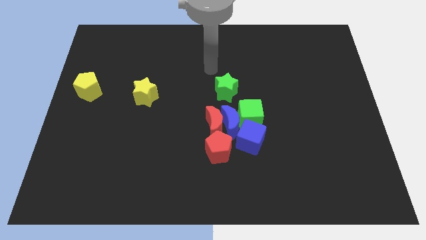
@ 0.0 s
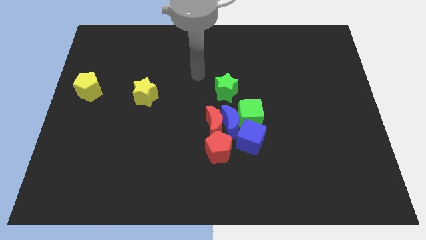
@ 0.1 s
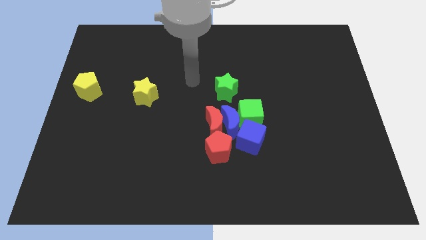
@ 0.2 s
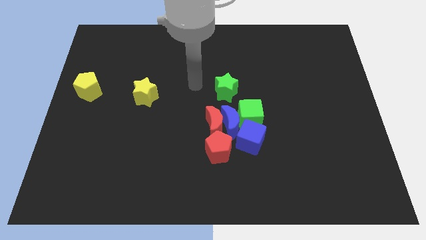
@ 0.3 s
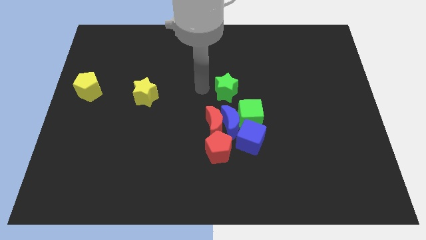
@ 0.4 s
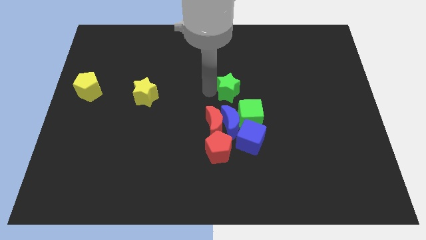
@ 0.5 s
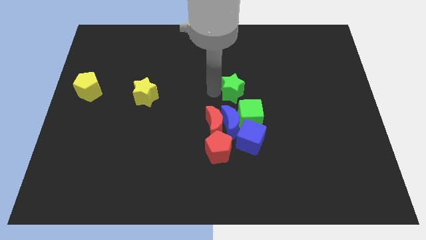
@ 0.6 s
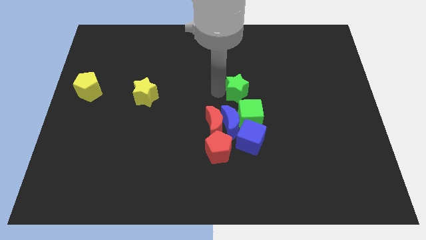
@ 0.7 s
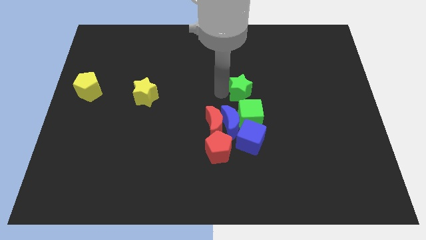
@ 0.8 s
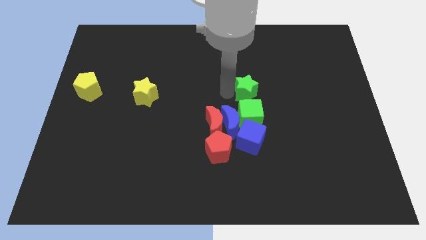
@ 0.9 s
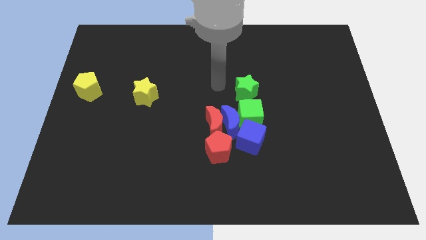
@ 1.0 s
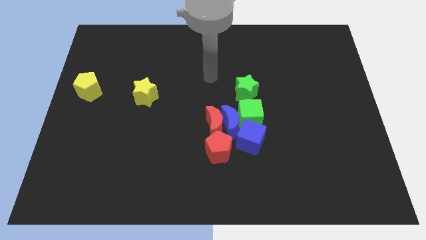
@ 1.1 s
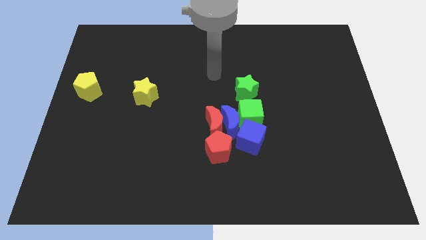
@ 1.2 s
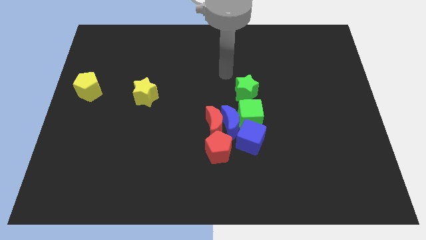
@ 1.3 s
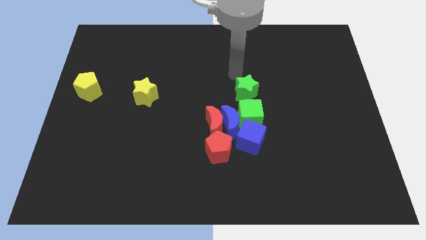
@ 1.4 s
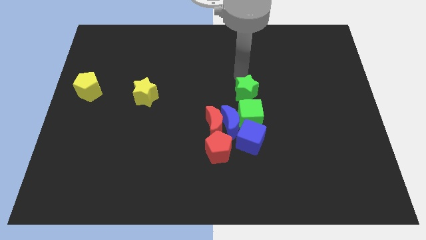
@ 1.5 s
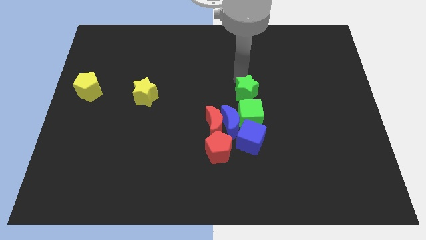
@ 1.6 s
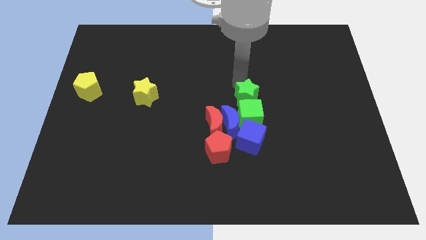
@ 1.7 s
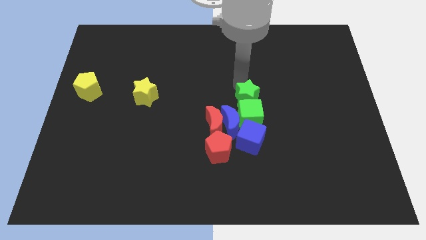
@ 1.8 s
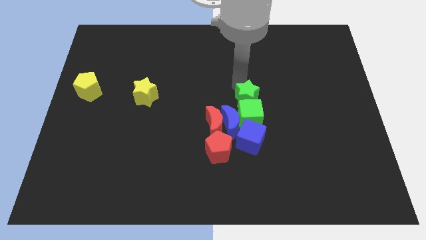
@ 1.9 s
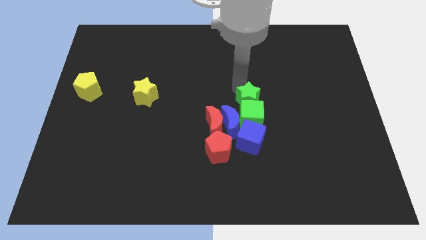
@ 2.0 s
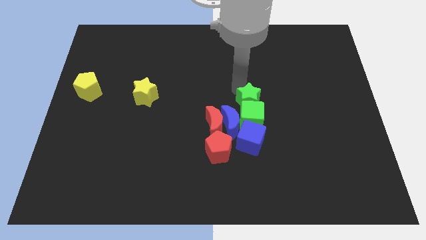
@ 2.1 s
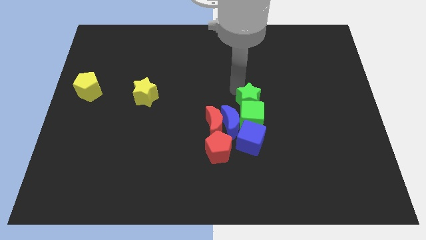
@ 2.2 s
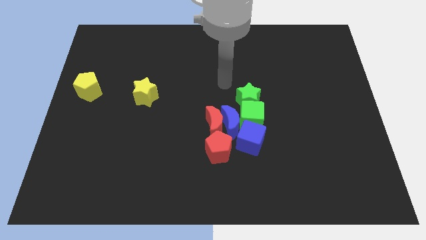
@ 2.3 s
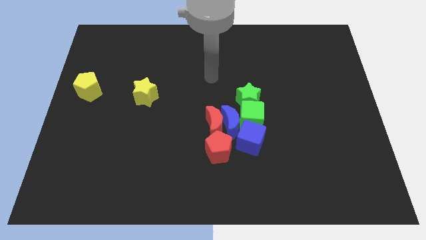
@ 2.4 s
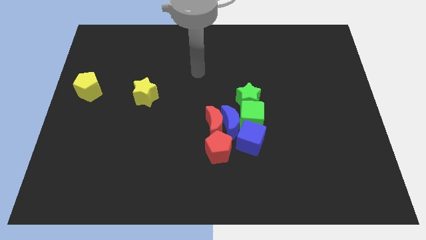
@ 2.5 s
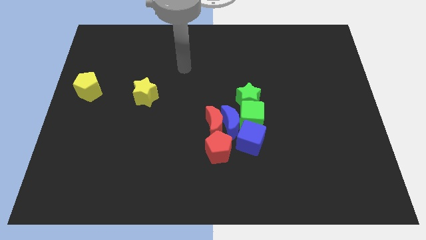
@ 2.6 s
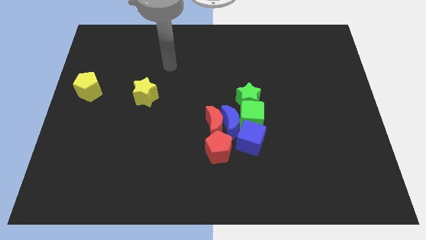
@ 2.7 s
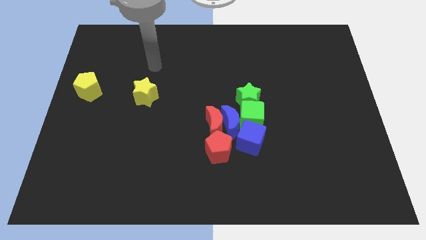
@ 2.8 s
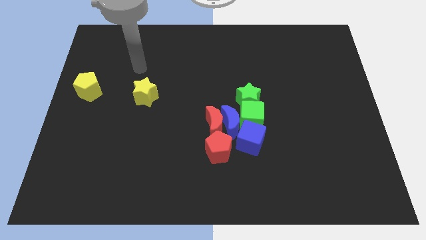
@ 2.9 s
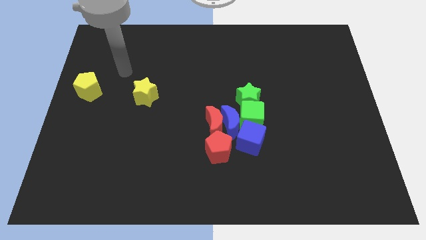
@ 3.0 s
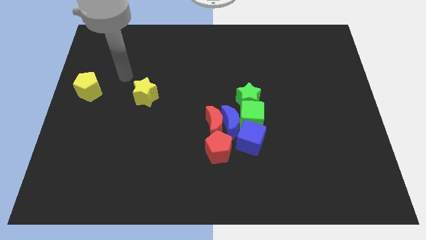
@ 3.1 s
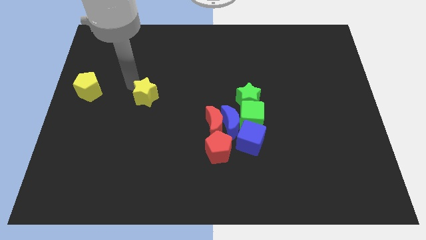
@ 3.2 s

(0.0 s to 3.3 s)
move the green star above the green cube

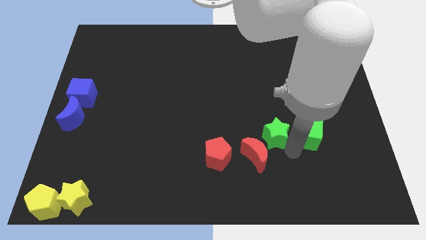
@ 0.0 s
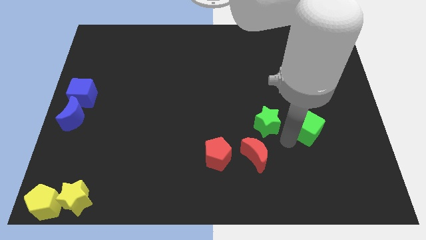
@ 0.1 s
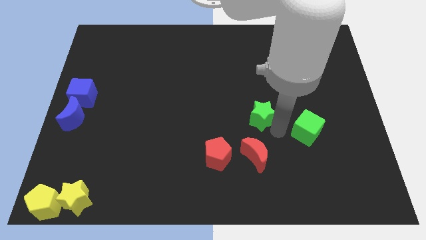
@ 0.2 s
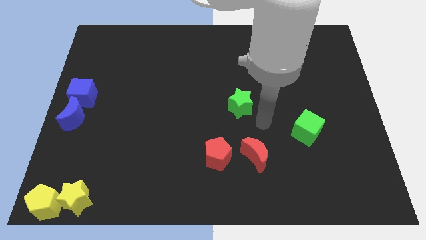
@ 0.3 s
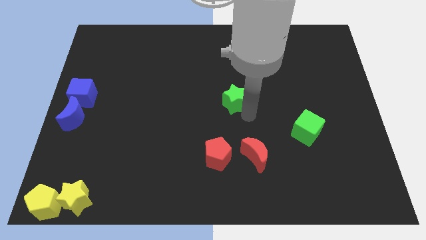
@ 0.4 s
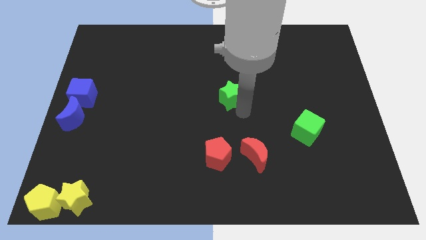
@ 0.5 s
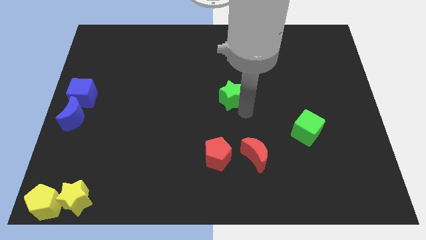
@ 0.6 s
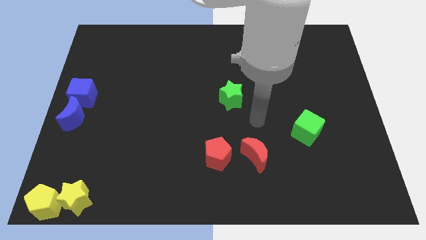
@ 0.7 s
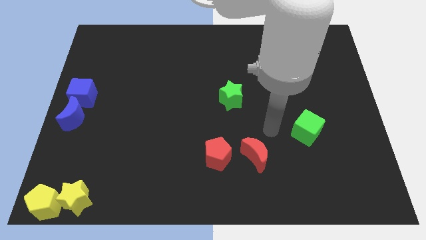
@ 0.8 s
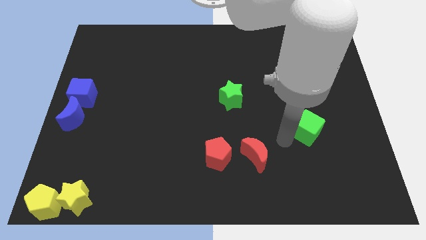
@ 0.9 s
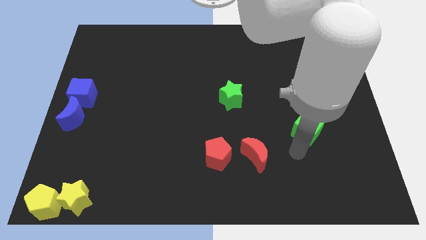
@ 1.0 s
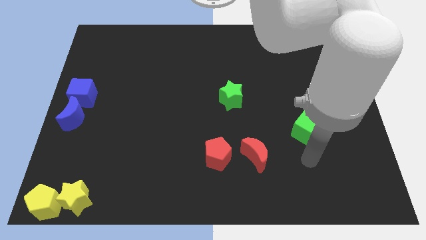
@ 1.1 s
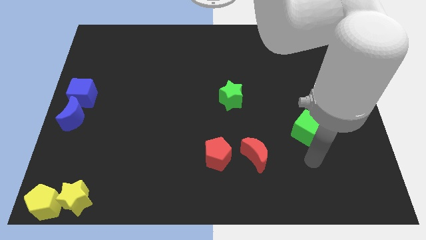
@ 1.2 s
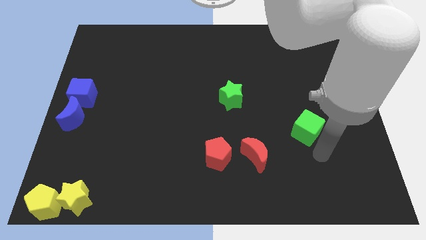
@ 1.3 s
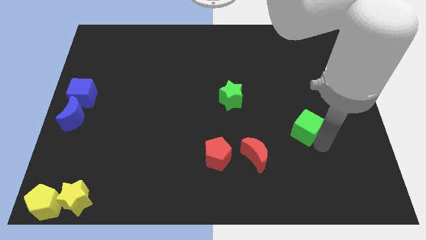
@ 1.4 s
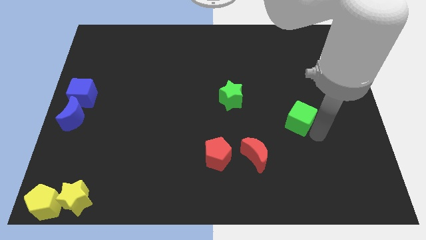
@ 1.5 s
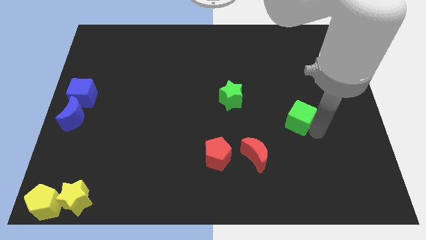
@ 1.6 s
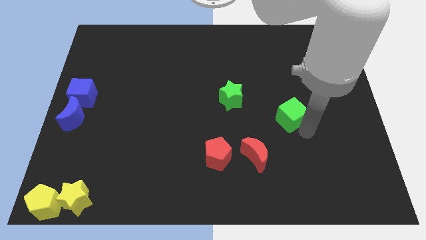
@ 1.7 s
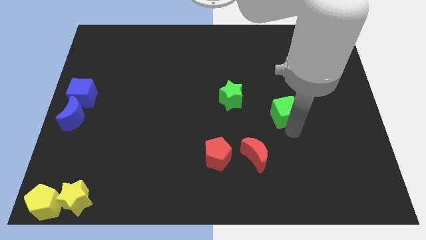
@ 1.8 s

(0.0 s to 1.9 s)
move the green blocks to the center

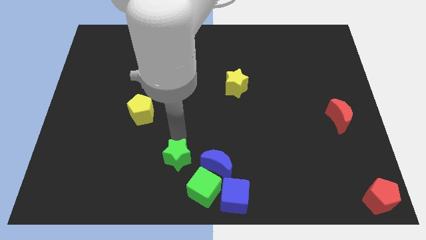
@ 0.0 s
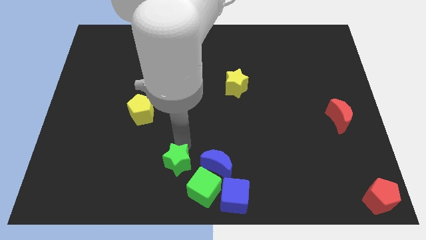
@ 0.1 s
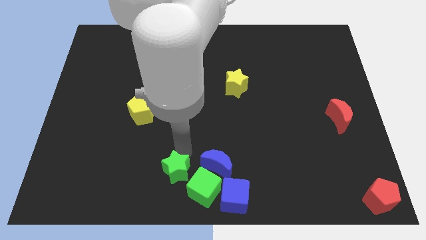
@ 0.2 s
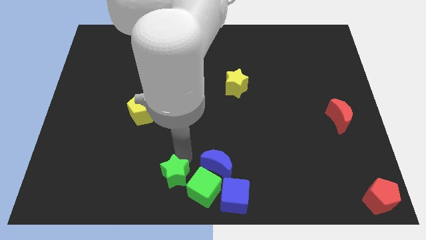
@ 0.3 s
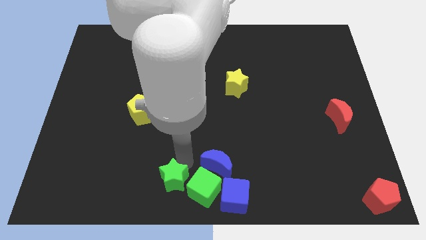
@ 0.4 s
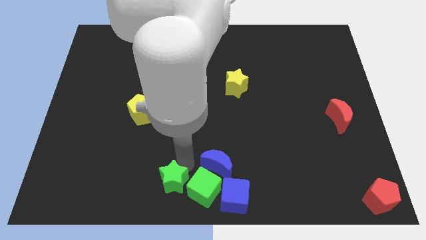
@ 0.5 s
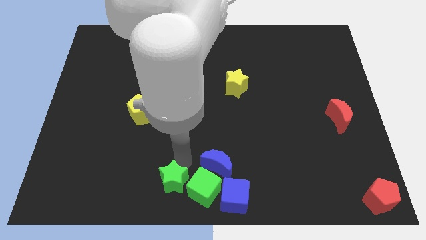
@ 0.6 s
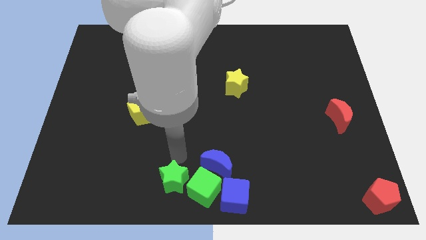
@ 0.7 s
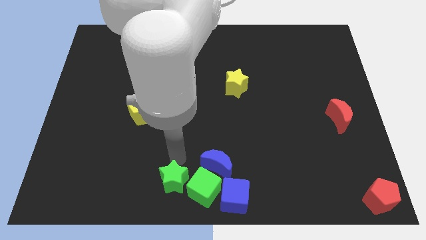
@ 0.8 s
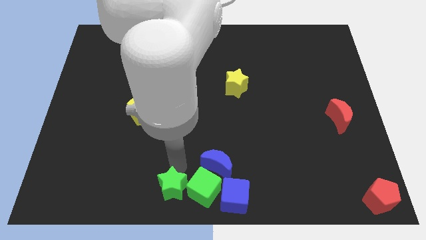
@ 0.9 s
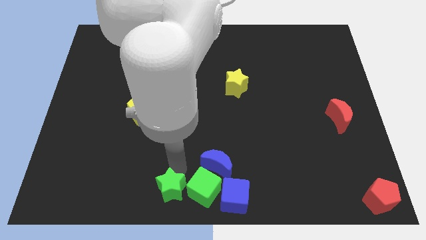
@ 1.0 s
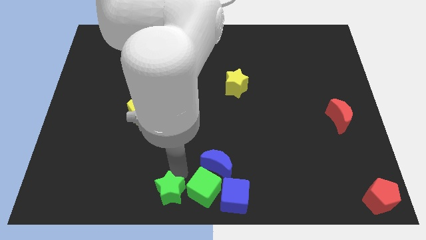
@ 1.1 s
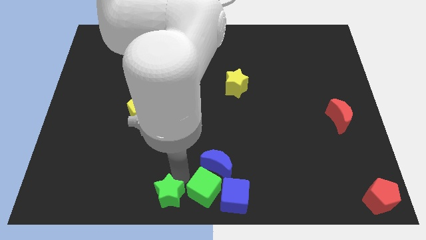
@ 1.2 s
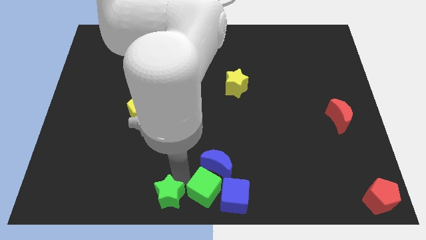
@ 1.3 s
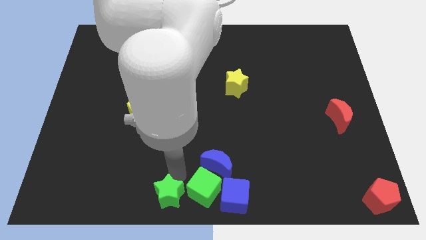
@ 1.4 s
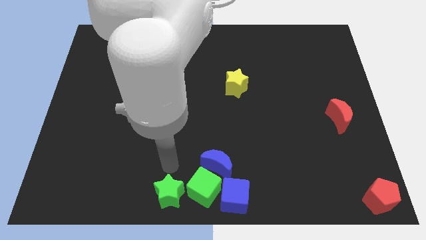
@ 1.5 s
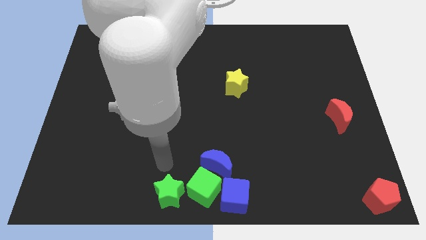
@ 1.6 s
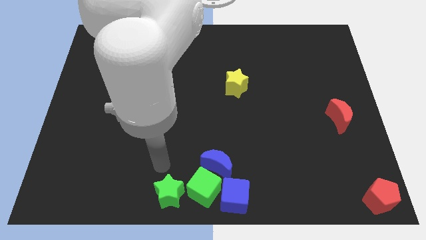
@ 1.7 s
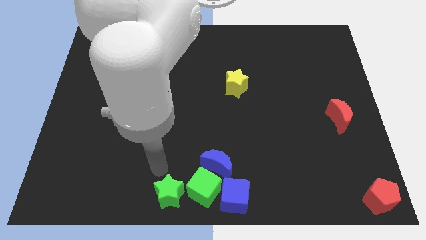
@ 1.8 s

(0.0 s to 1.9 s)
drag the green star towards the left side of the green cube

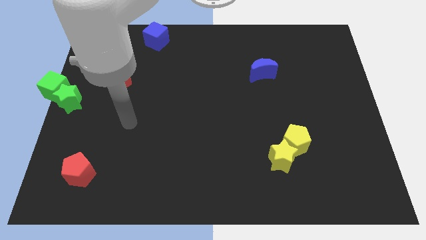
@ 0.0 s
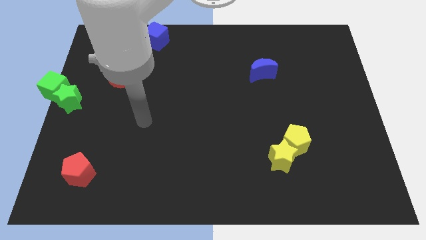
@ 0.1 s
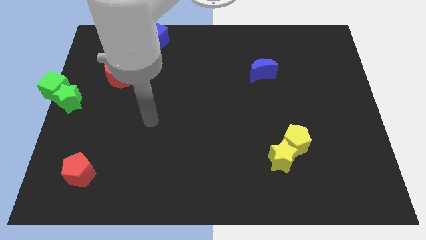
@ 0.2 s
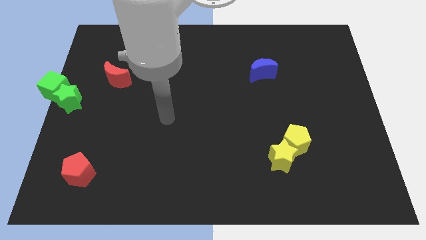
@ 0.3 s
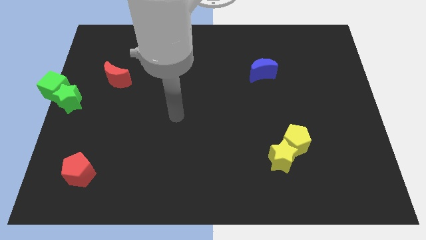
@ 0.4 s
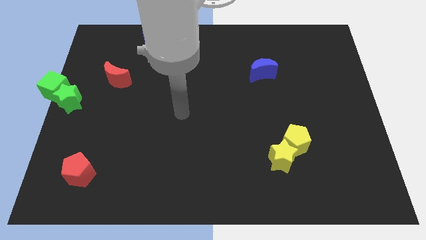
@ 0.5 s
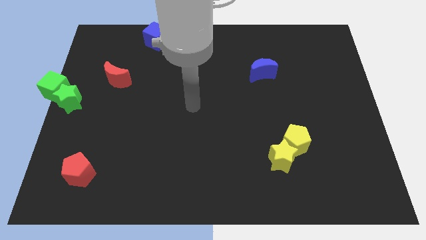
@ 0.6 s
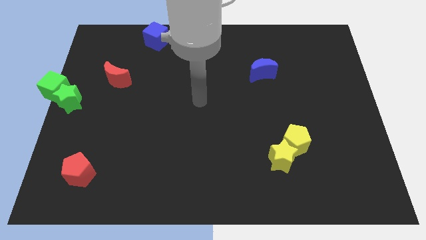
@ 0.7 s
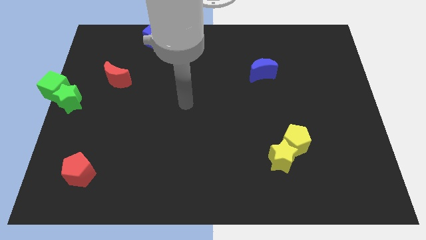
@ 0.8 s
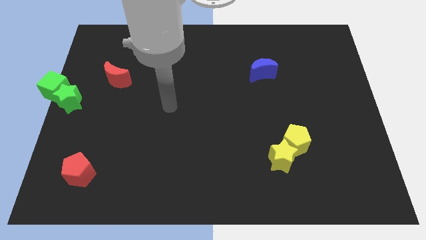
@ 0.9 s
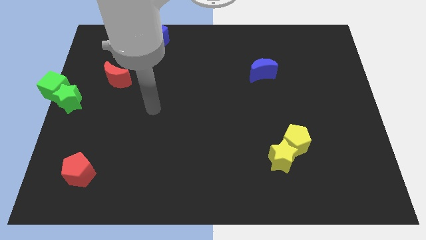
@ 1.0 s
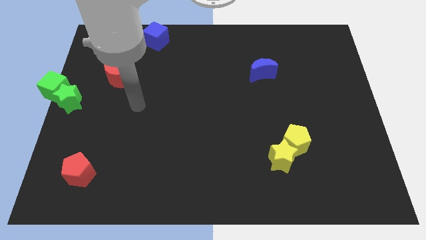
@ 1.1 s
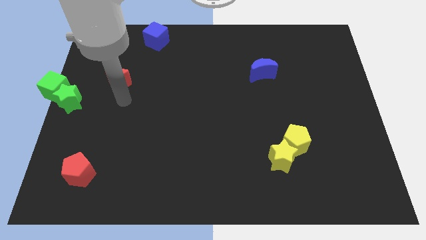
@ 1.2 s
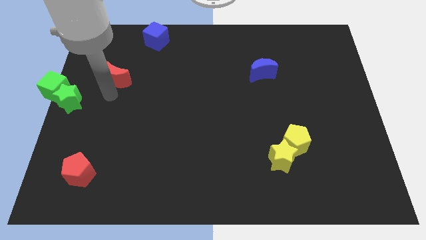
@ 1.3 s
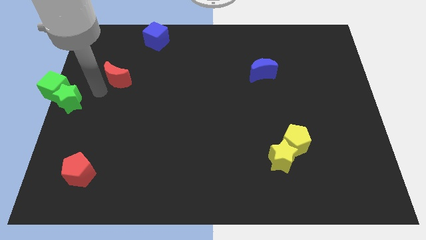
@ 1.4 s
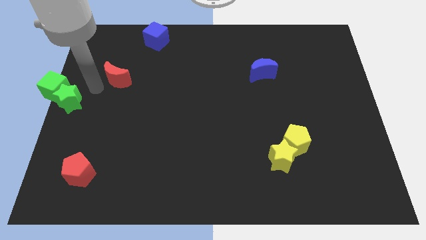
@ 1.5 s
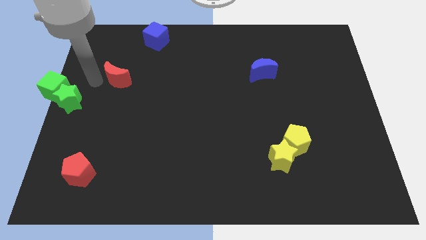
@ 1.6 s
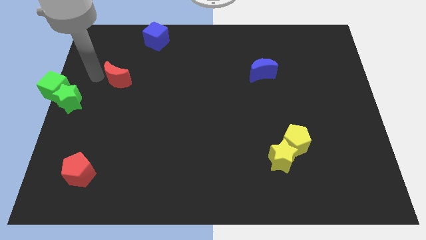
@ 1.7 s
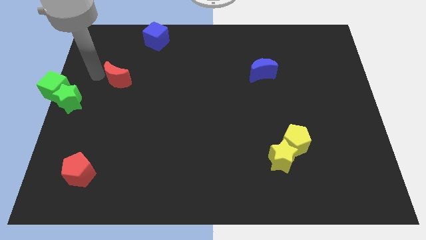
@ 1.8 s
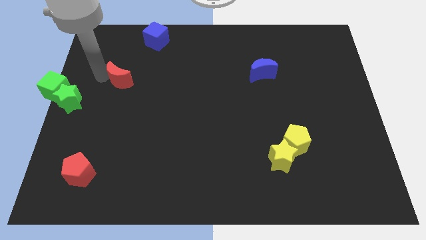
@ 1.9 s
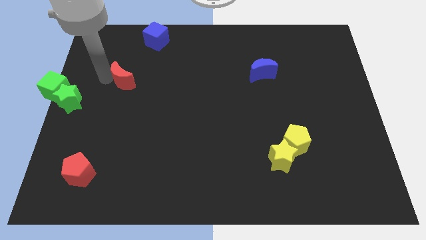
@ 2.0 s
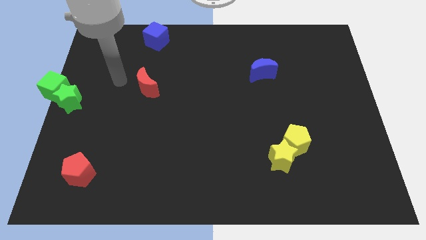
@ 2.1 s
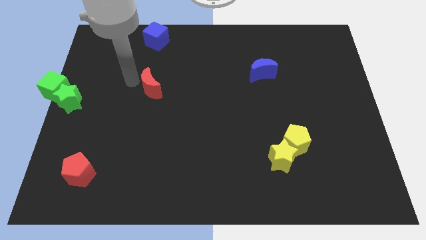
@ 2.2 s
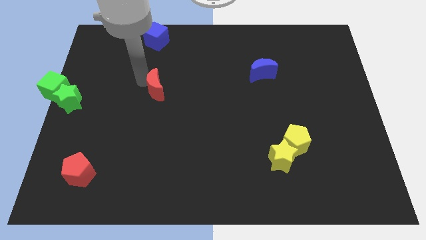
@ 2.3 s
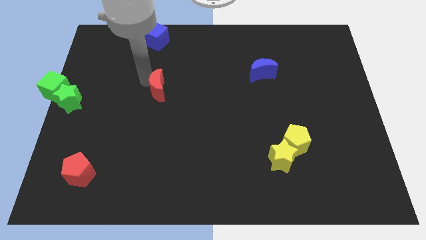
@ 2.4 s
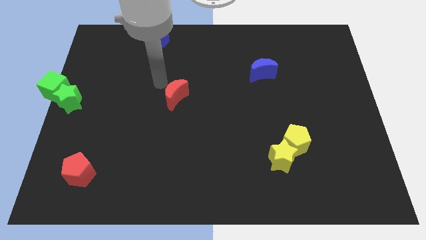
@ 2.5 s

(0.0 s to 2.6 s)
place red moon to the bottom of blue cube
